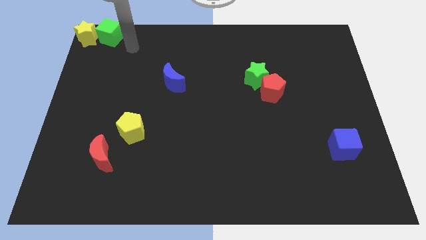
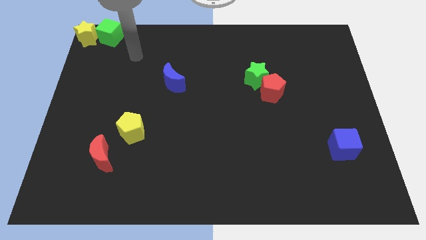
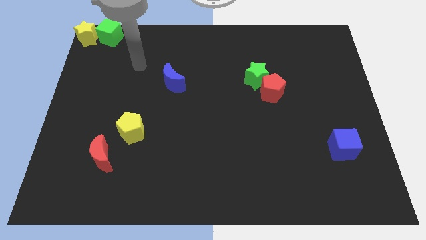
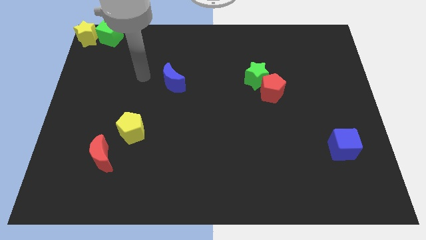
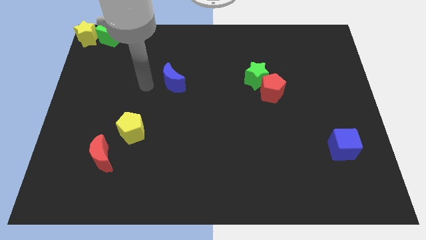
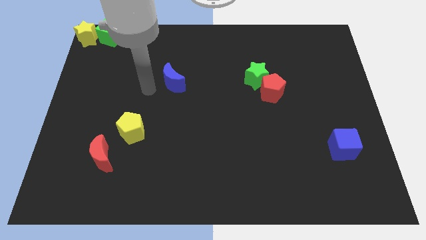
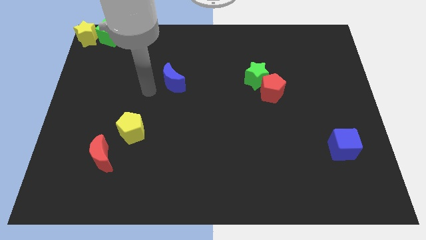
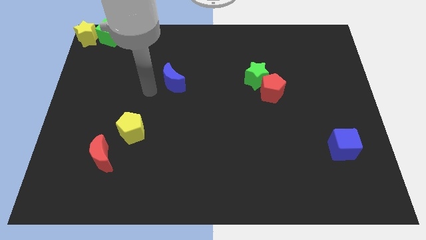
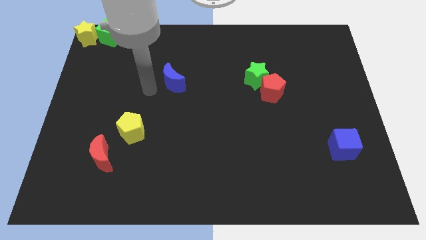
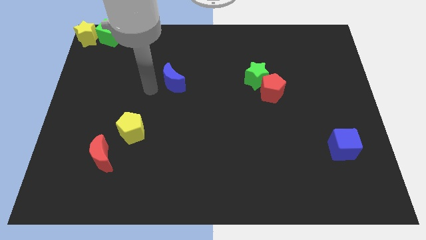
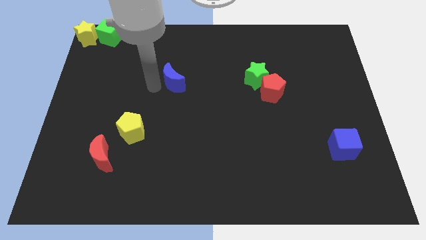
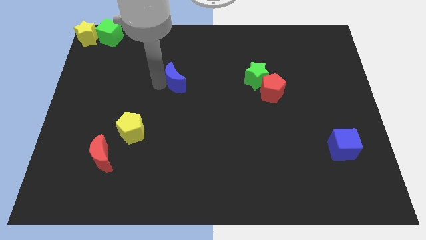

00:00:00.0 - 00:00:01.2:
move your arm towards the blue moon

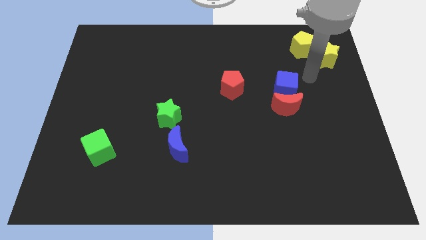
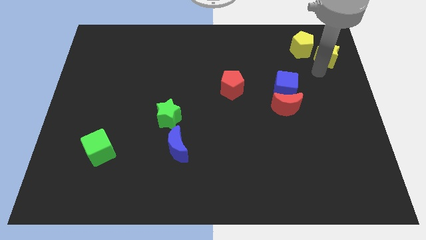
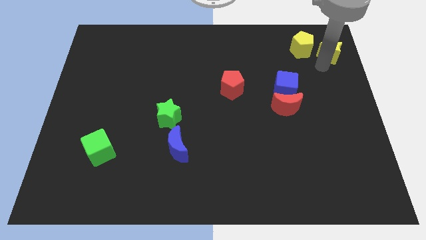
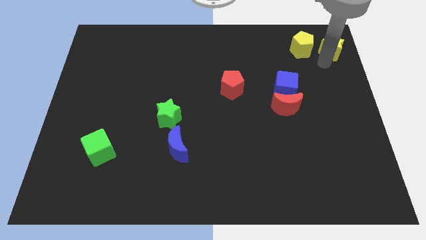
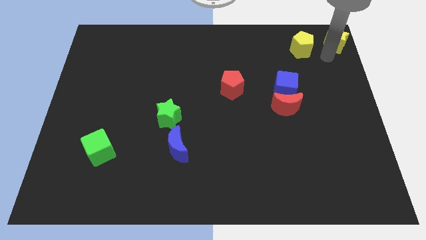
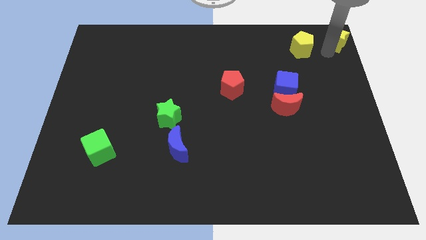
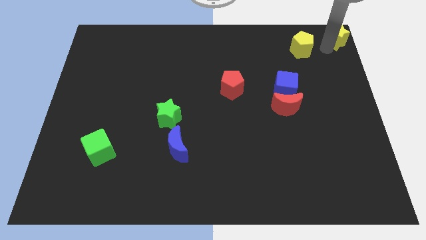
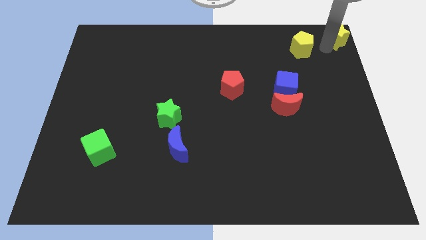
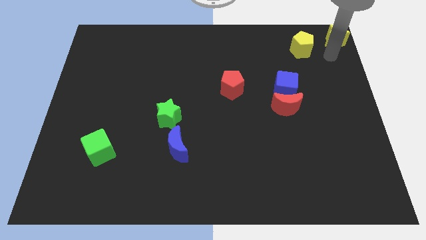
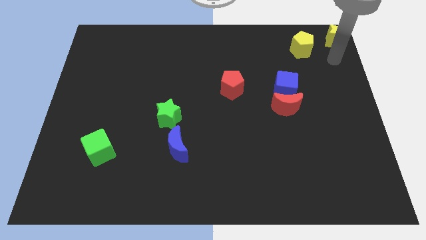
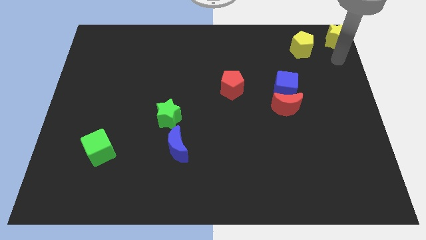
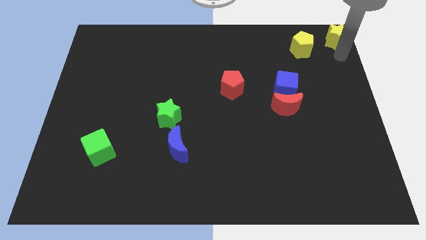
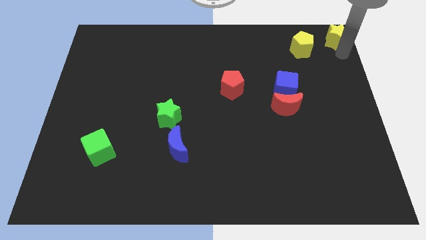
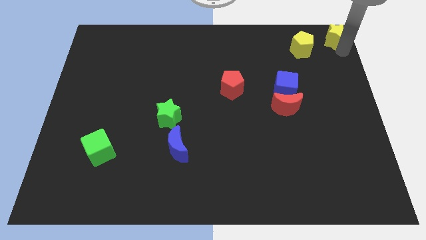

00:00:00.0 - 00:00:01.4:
separate the yellow star from yellow pentagon

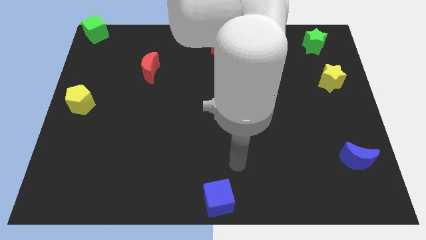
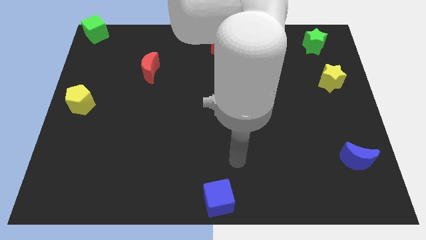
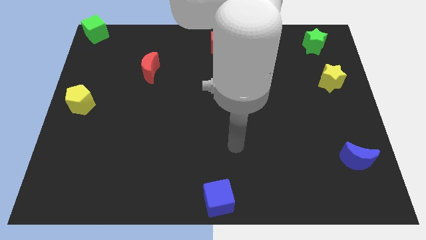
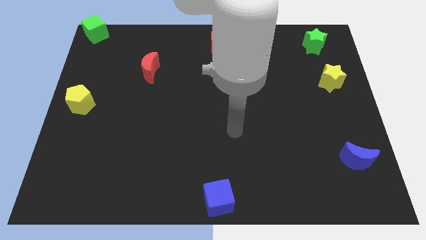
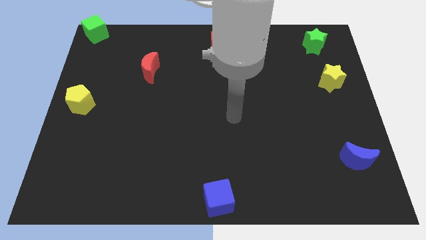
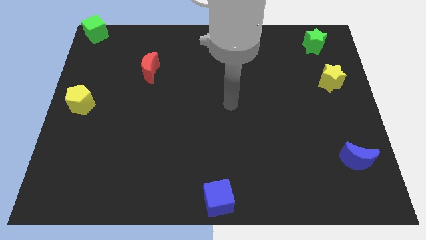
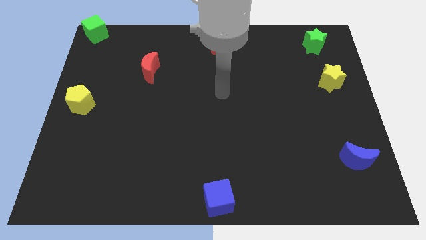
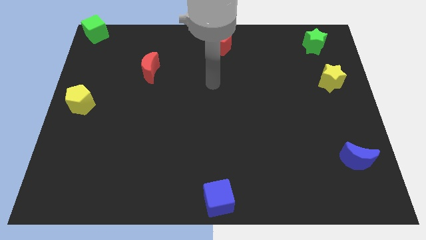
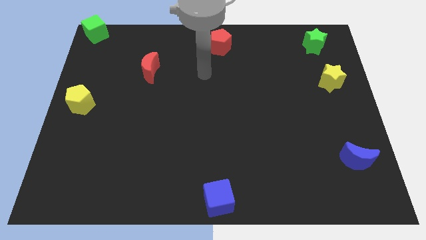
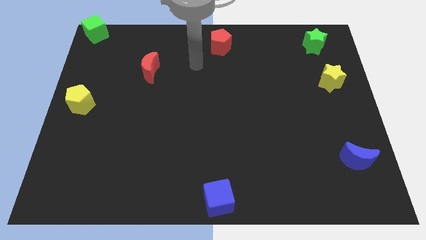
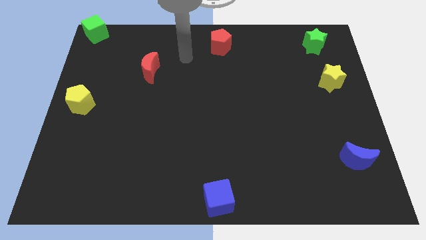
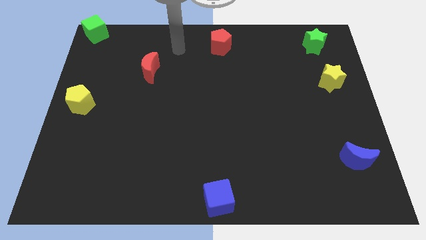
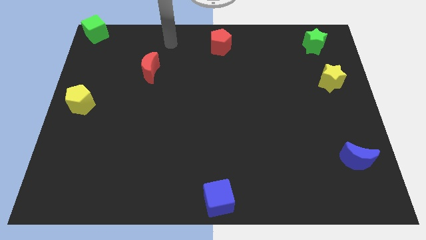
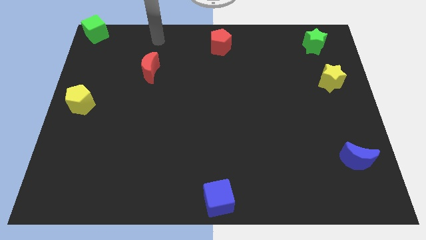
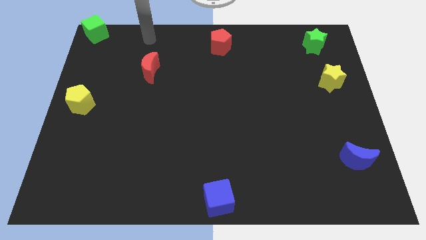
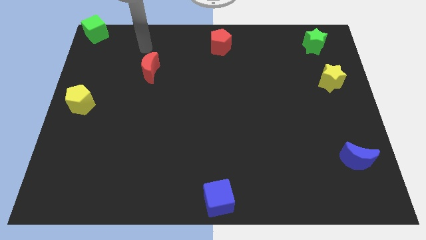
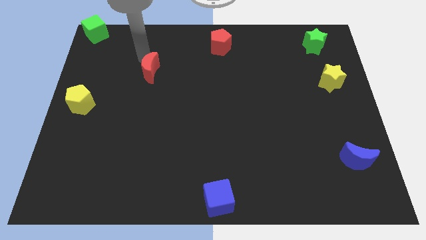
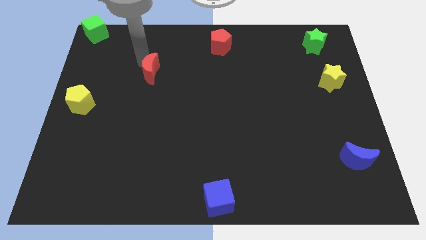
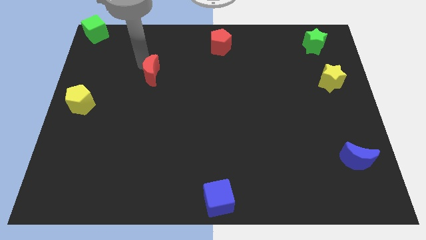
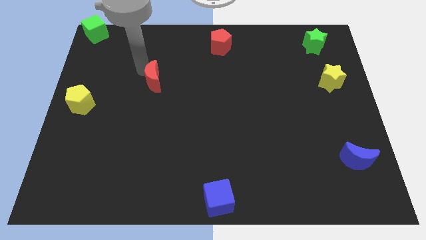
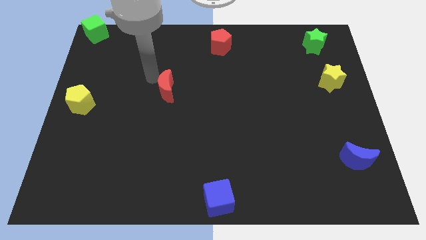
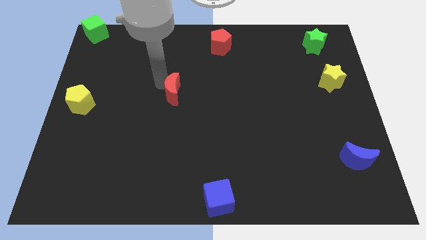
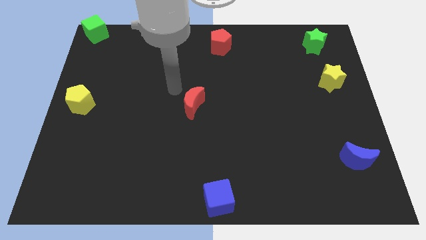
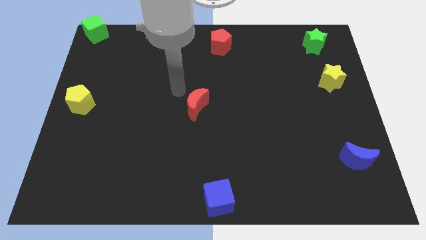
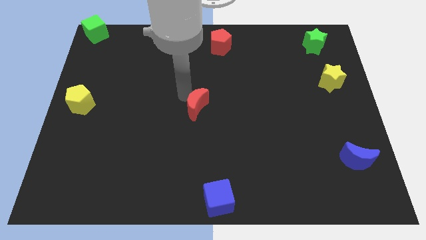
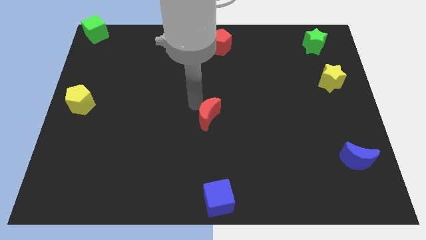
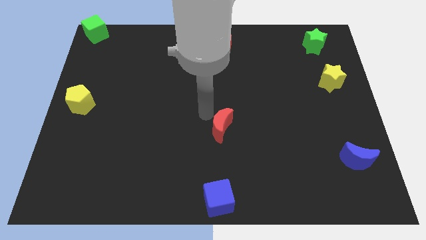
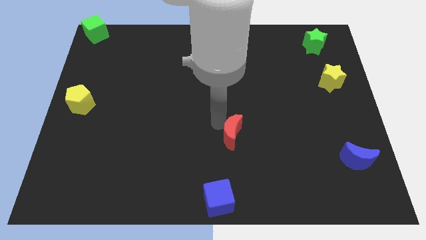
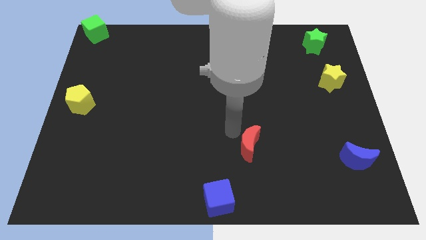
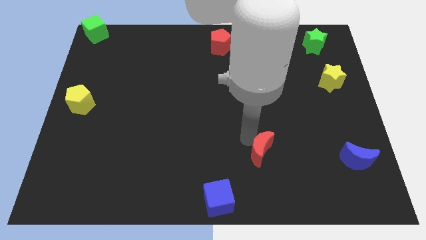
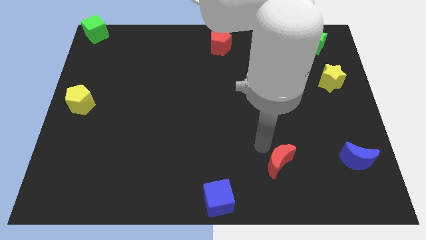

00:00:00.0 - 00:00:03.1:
push the red crescent towards the bottom right of the board

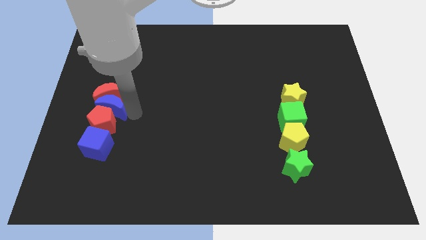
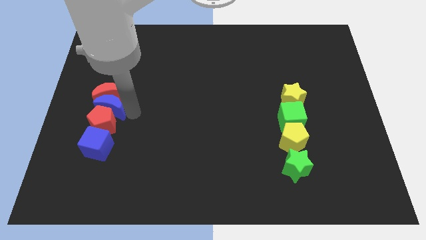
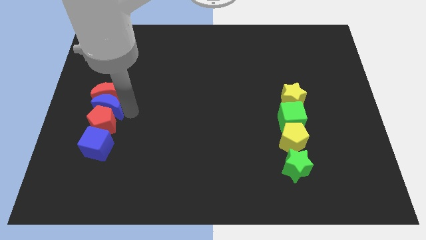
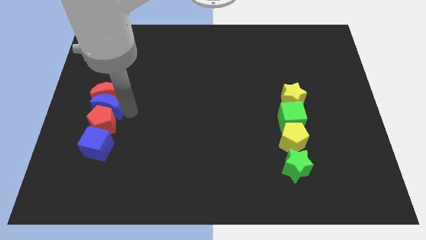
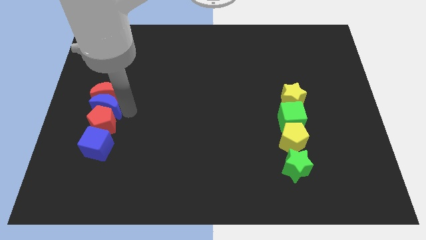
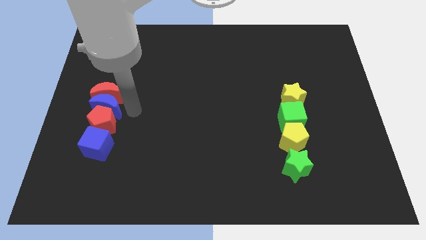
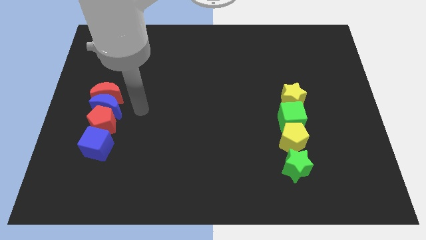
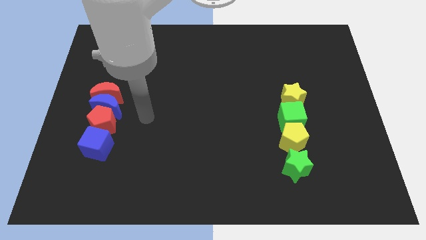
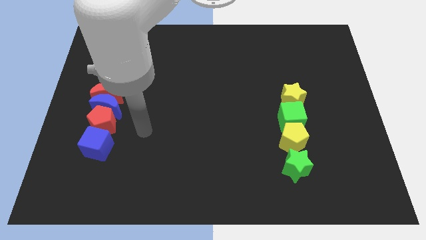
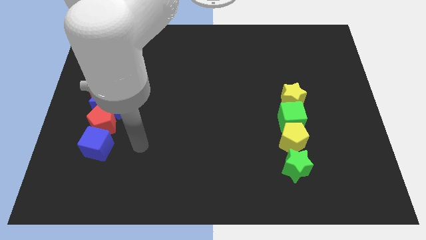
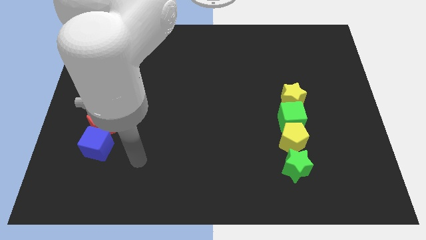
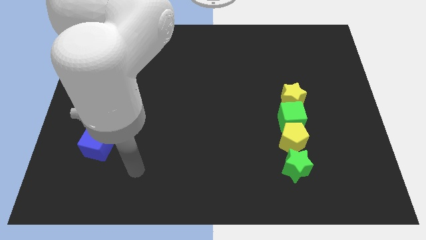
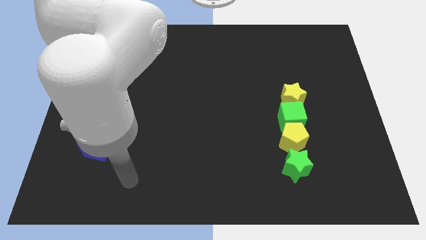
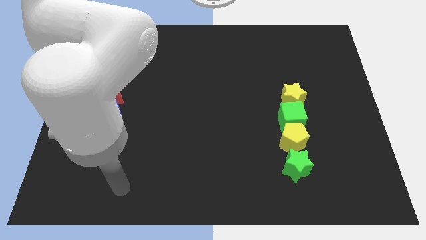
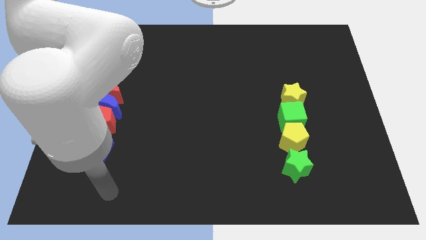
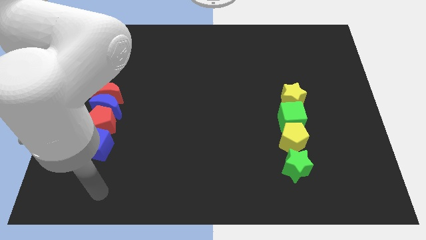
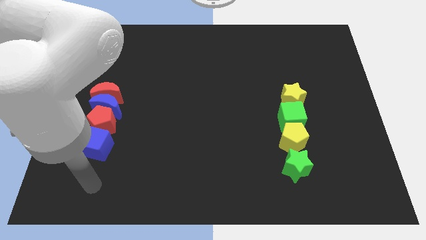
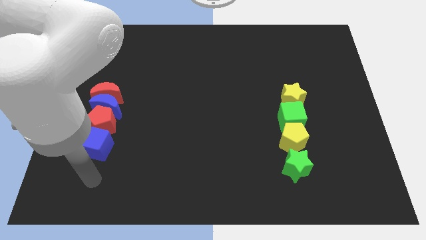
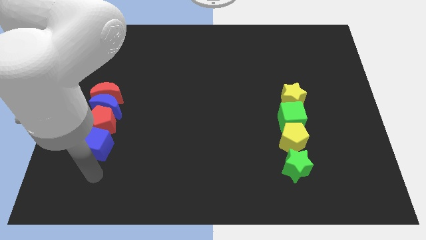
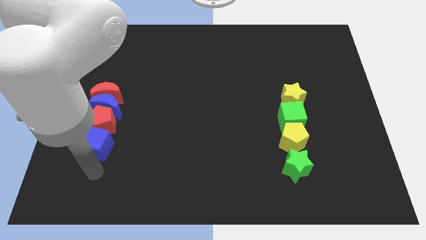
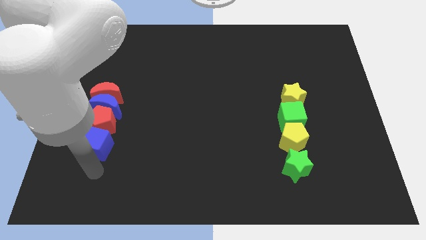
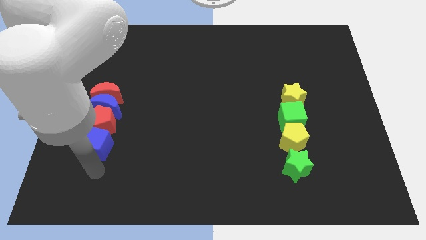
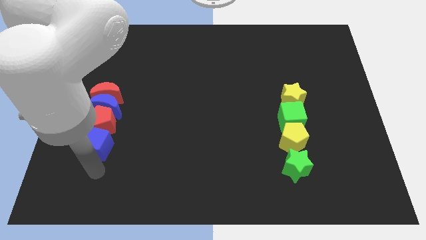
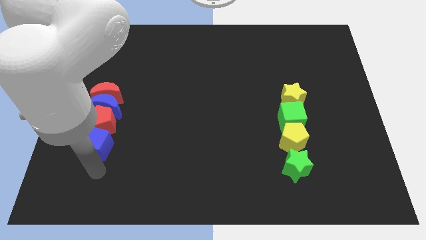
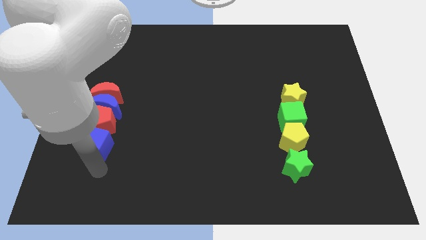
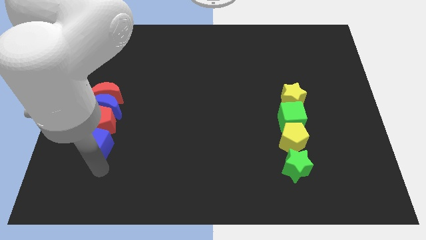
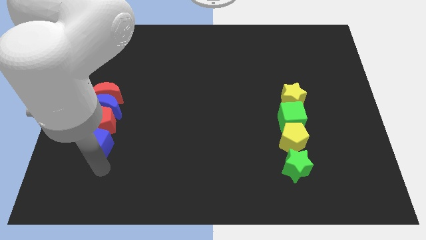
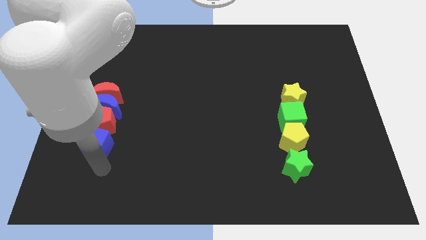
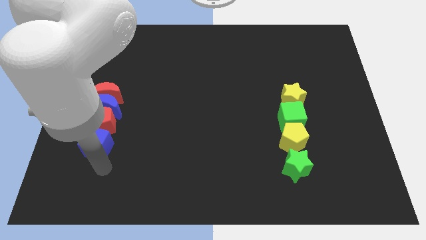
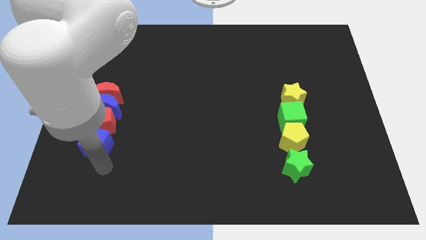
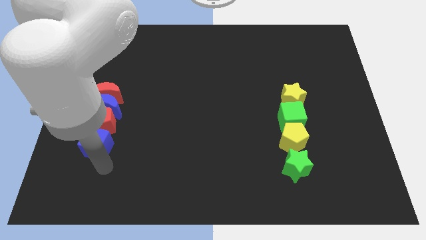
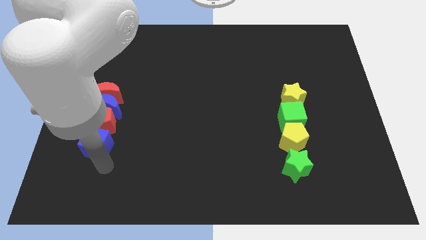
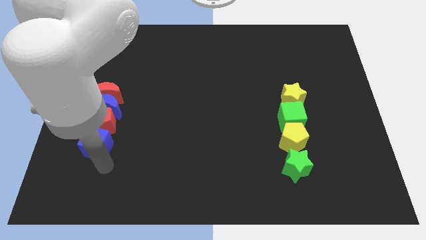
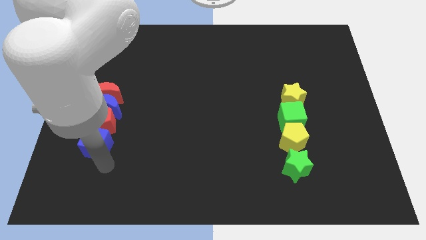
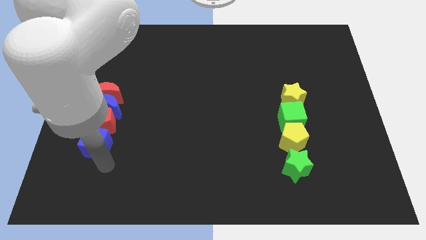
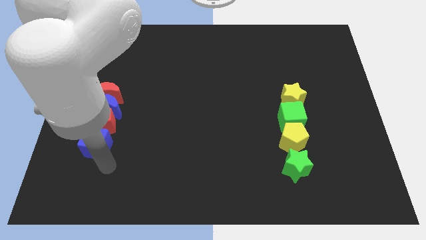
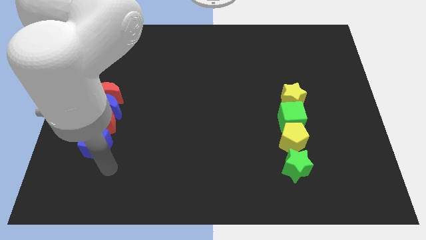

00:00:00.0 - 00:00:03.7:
move the arm towards the blue cube
